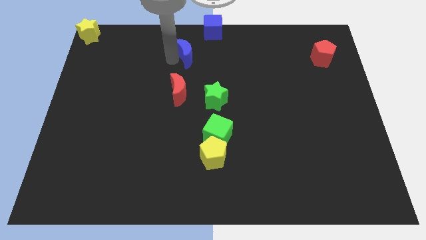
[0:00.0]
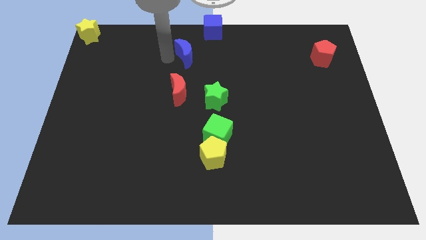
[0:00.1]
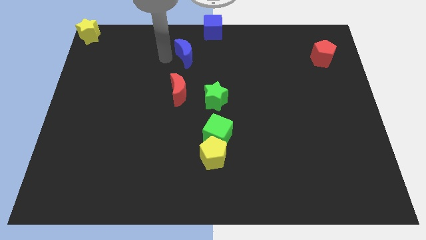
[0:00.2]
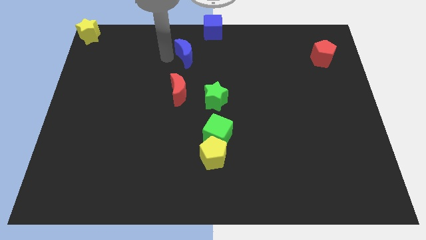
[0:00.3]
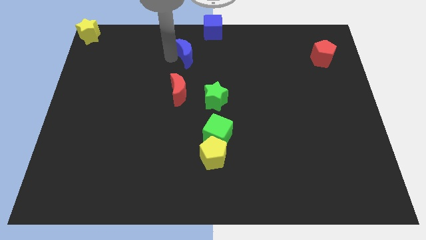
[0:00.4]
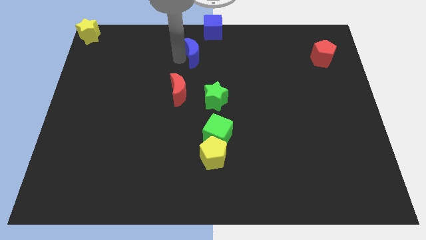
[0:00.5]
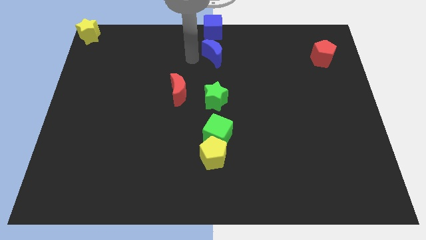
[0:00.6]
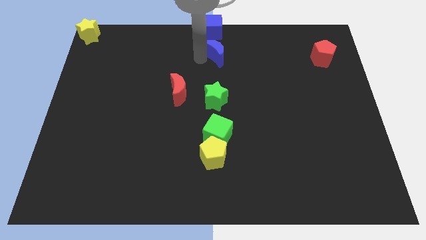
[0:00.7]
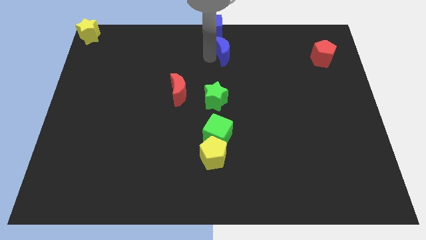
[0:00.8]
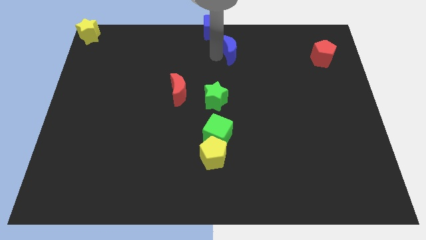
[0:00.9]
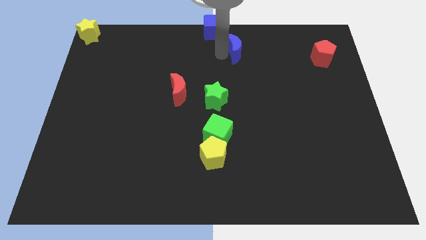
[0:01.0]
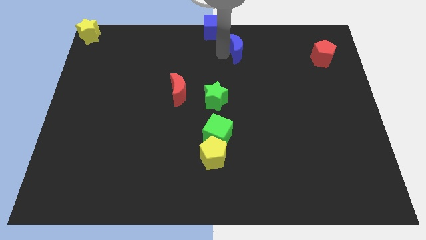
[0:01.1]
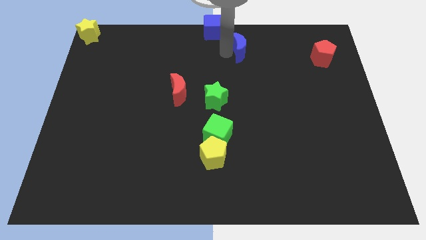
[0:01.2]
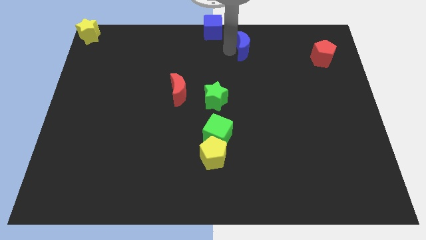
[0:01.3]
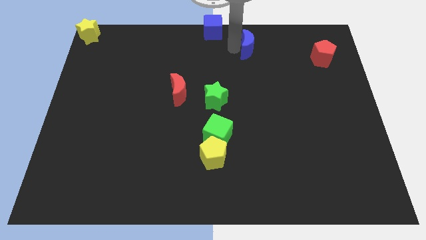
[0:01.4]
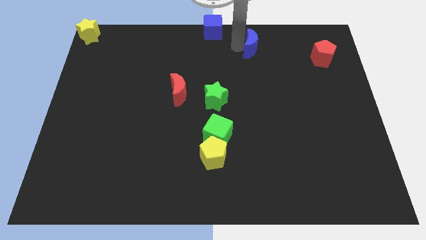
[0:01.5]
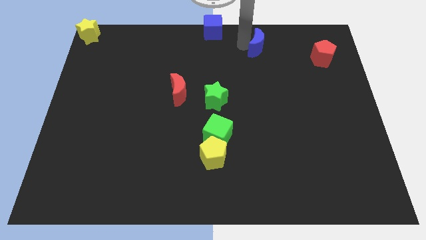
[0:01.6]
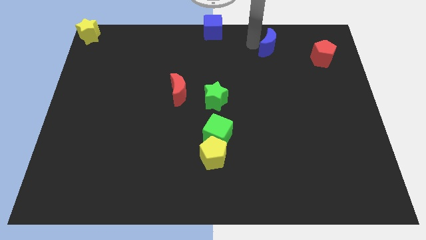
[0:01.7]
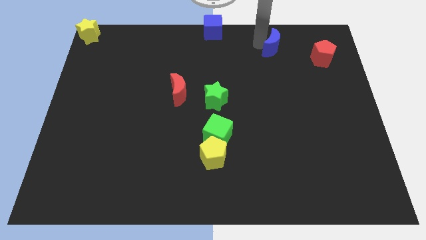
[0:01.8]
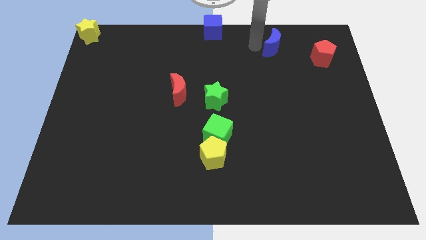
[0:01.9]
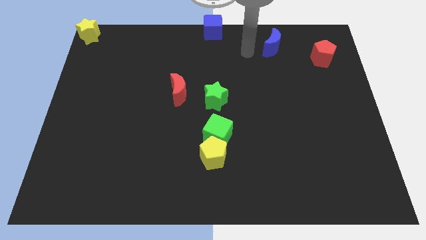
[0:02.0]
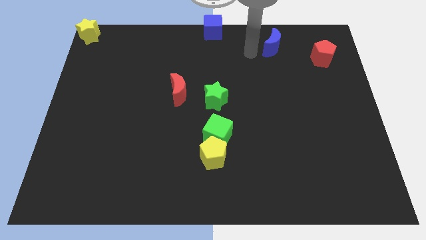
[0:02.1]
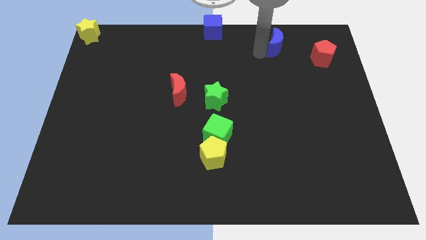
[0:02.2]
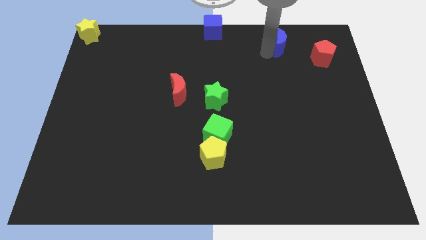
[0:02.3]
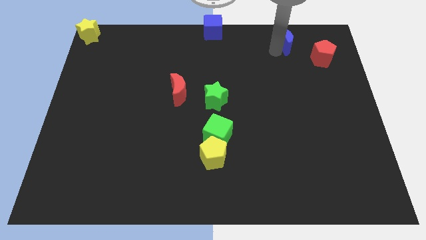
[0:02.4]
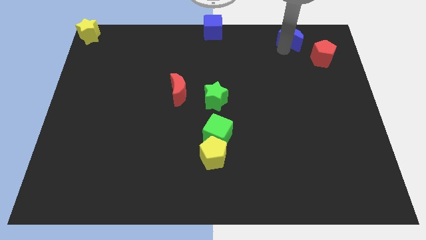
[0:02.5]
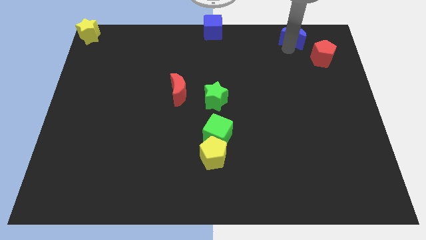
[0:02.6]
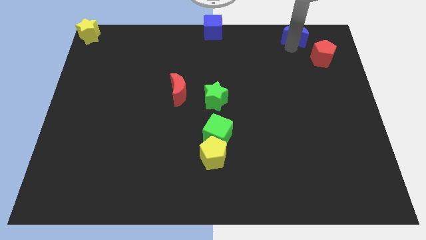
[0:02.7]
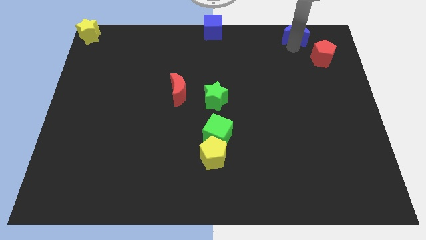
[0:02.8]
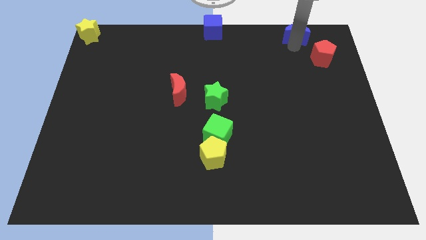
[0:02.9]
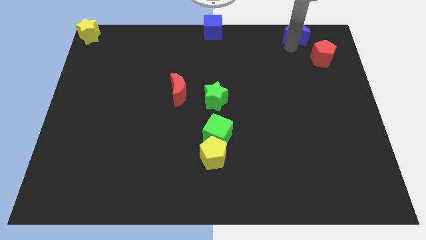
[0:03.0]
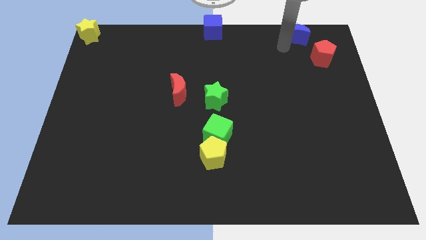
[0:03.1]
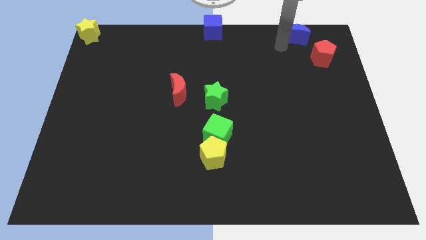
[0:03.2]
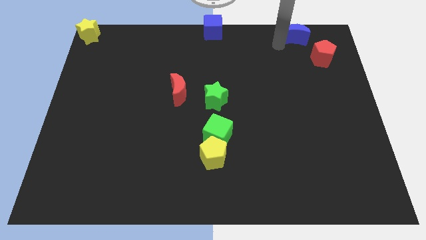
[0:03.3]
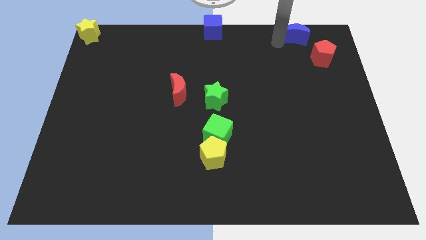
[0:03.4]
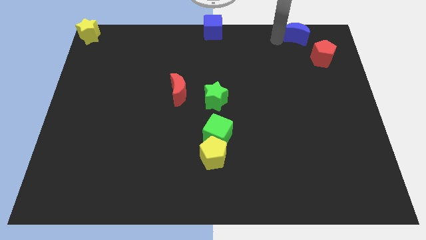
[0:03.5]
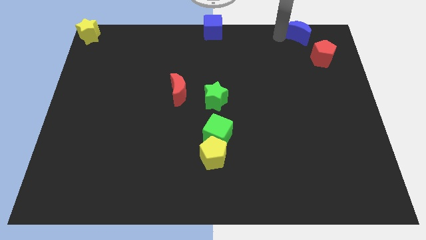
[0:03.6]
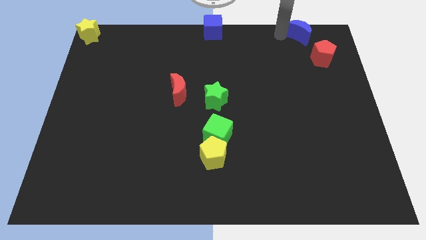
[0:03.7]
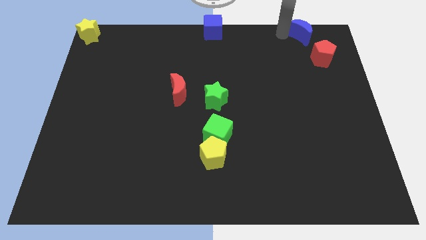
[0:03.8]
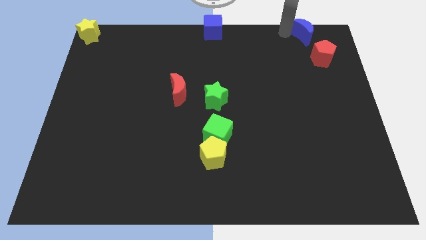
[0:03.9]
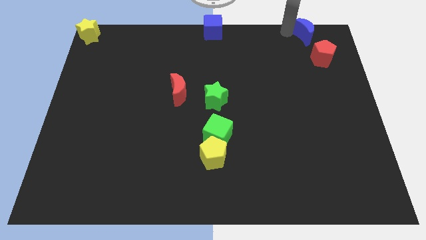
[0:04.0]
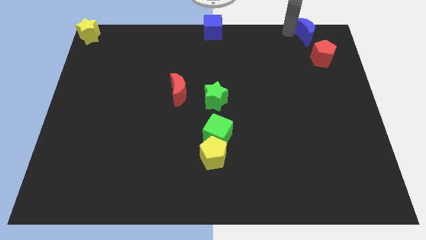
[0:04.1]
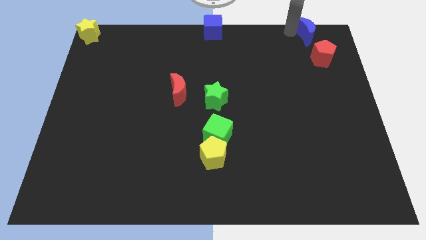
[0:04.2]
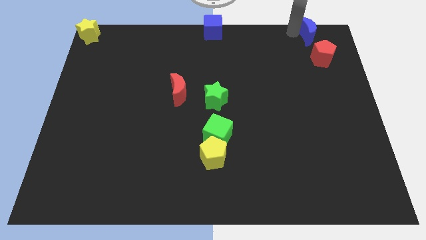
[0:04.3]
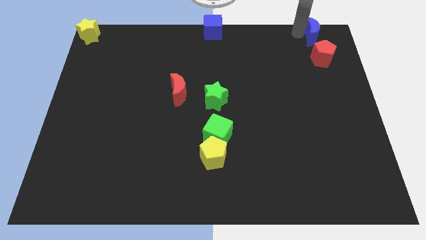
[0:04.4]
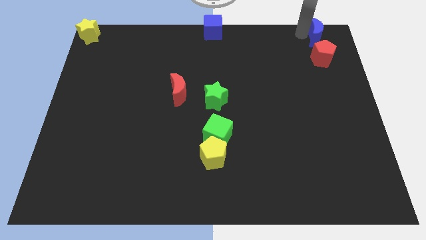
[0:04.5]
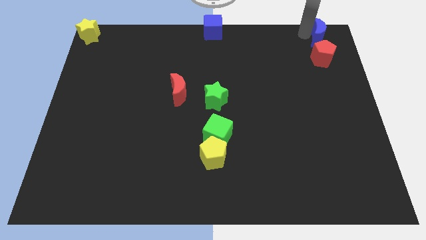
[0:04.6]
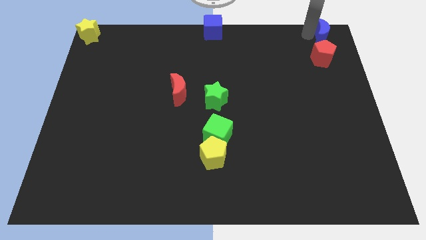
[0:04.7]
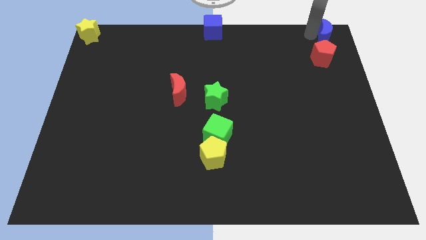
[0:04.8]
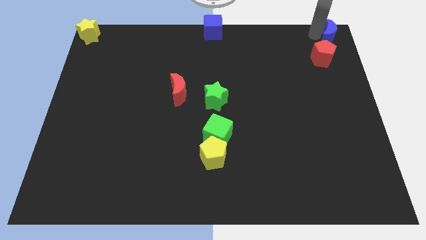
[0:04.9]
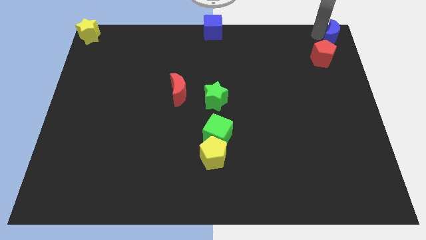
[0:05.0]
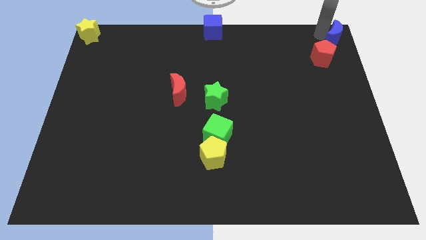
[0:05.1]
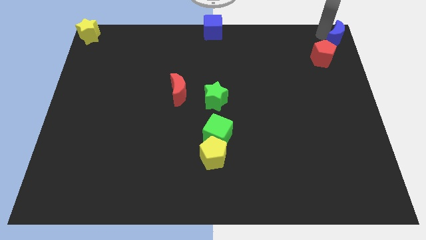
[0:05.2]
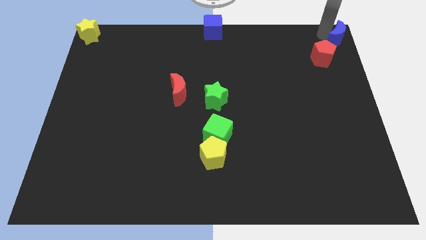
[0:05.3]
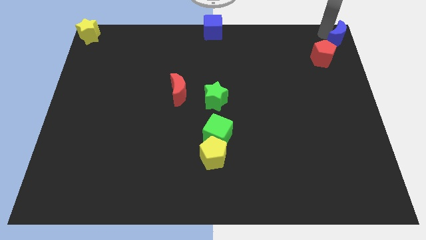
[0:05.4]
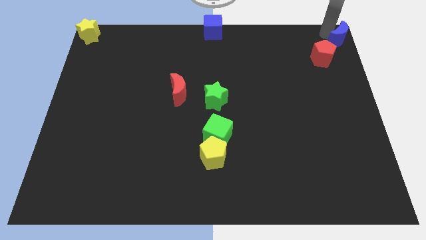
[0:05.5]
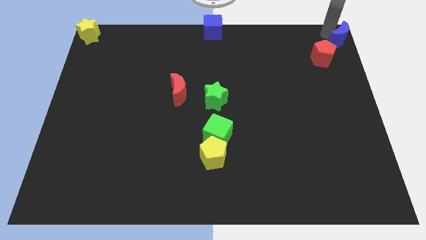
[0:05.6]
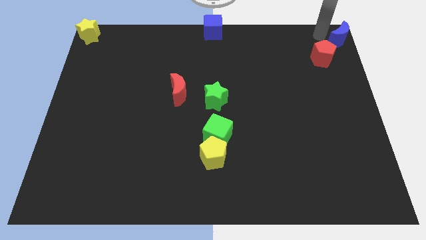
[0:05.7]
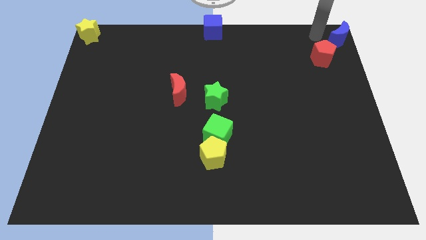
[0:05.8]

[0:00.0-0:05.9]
place the blue crescent diagonally above the top right side of the red pentagon

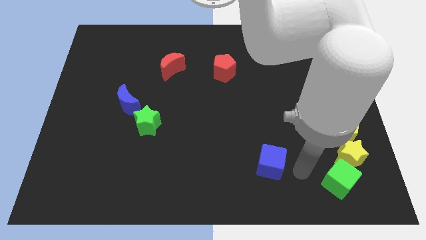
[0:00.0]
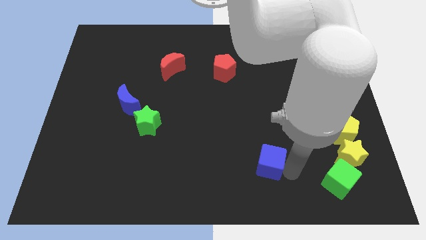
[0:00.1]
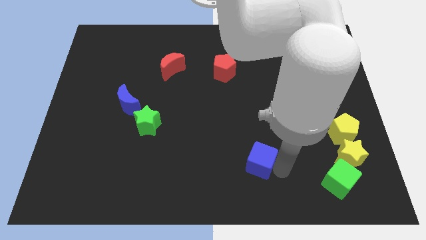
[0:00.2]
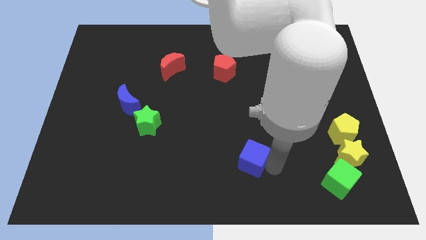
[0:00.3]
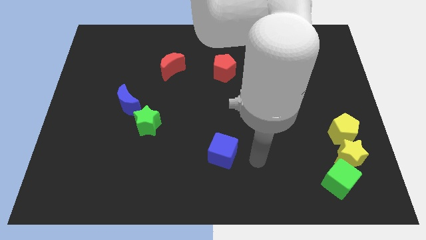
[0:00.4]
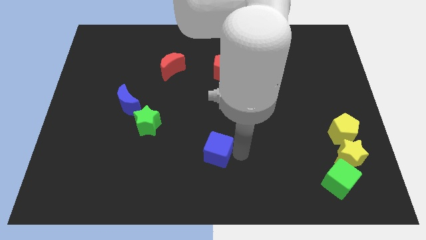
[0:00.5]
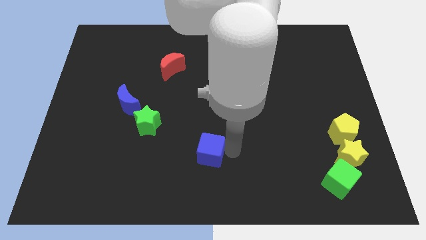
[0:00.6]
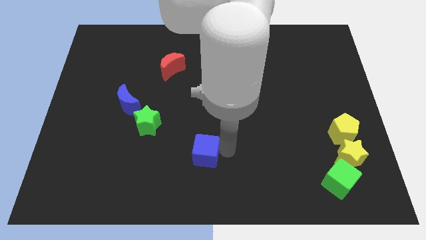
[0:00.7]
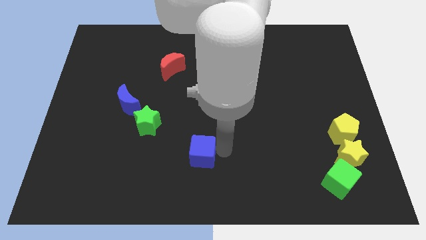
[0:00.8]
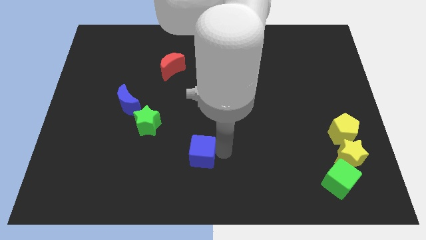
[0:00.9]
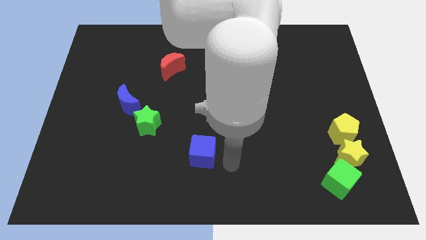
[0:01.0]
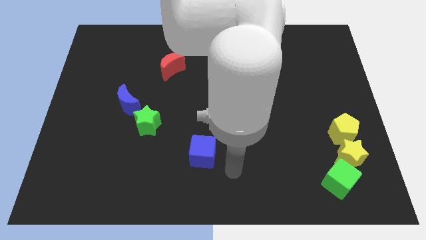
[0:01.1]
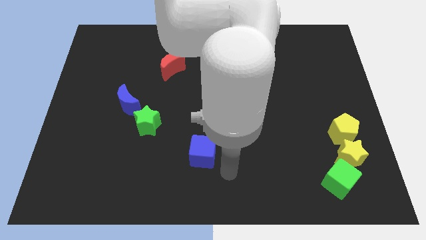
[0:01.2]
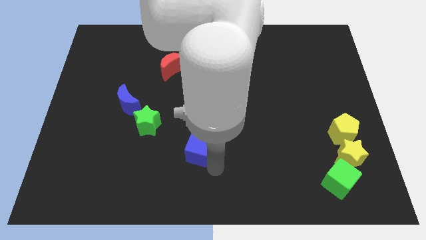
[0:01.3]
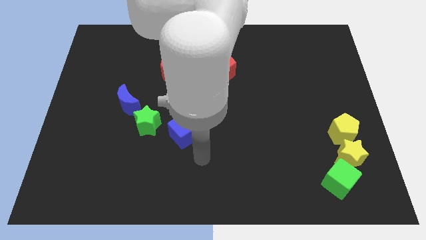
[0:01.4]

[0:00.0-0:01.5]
push the blue cube towards the green star

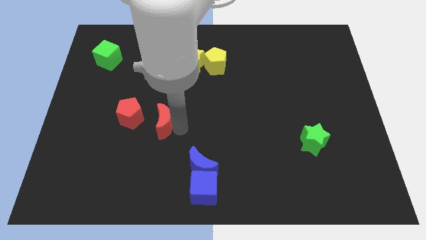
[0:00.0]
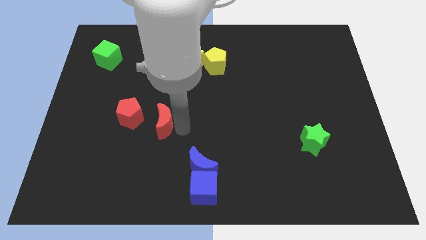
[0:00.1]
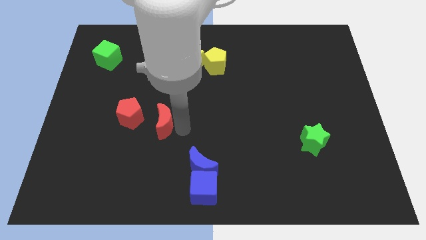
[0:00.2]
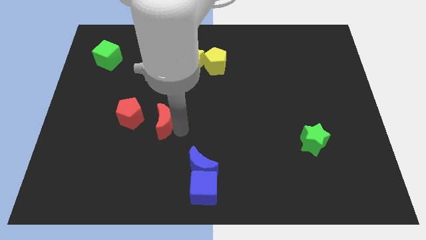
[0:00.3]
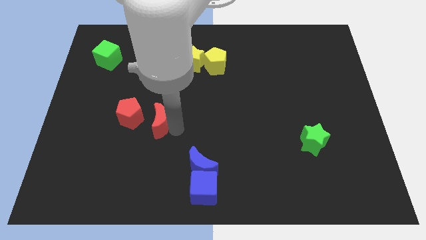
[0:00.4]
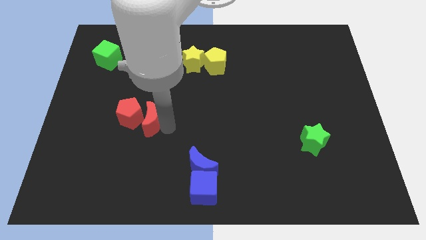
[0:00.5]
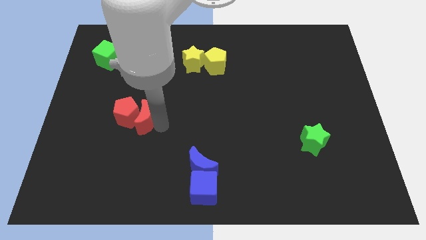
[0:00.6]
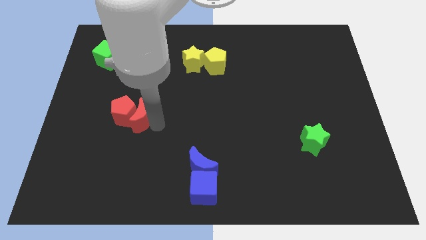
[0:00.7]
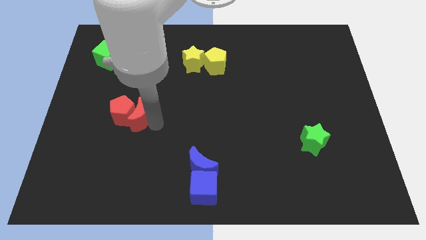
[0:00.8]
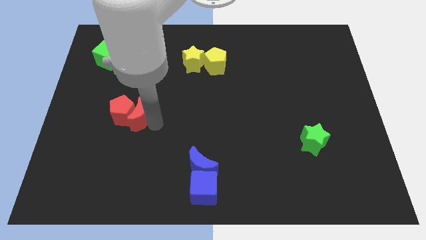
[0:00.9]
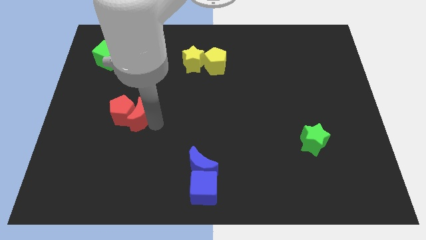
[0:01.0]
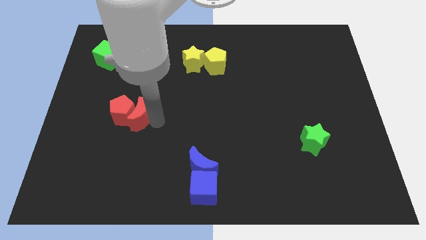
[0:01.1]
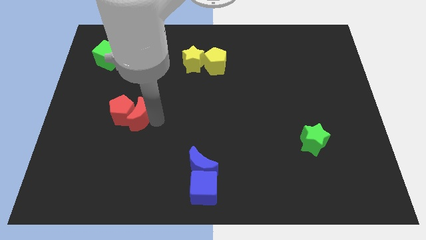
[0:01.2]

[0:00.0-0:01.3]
push the red moon into the red pentagon

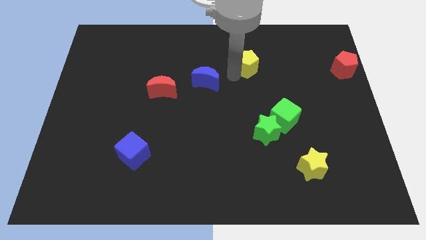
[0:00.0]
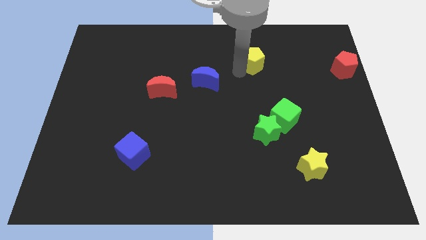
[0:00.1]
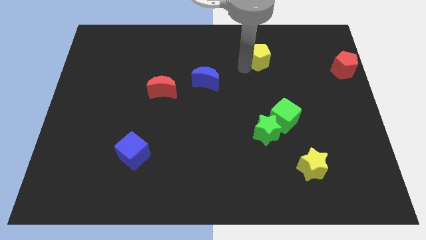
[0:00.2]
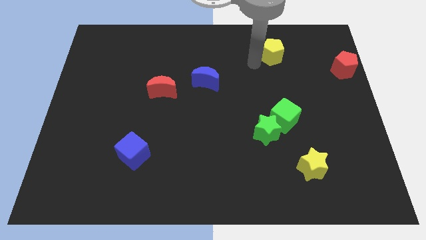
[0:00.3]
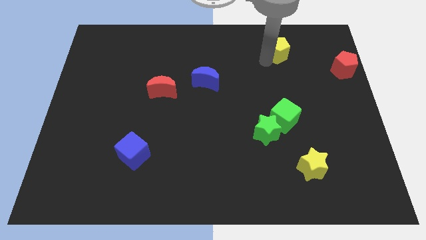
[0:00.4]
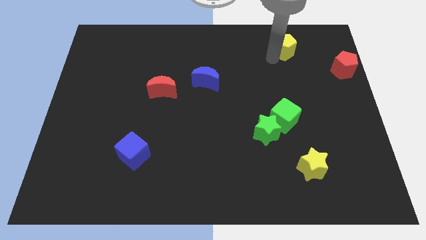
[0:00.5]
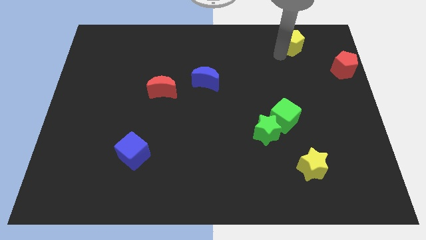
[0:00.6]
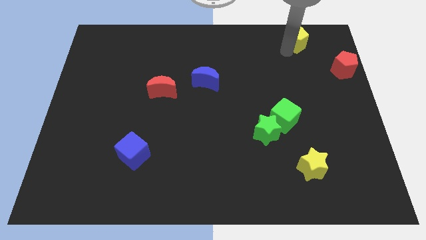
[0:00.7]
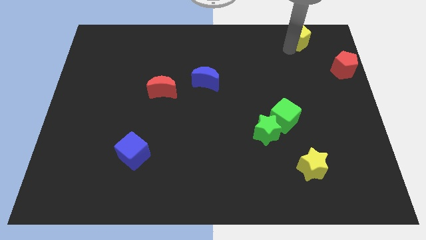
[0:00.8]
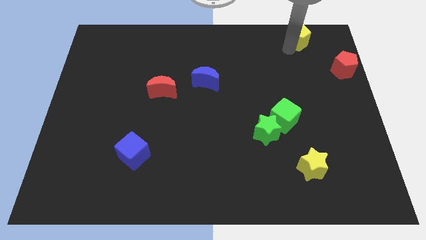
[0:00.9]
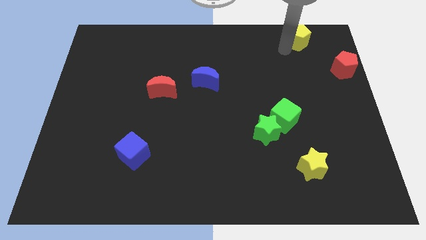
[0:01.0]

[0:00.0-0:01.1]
place the yellow pentagon diagonally to red pentagon
